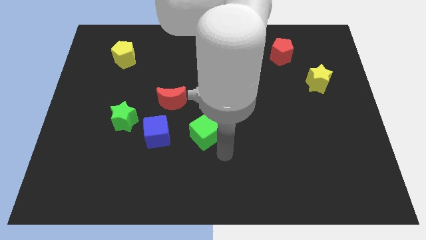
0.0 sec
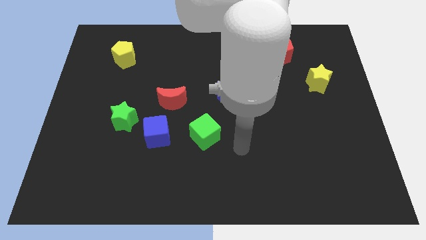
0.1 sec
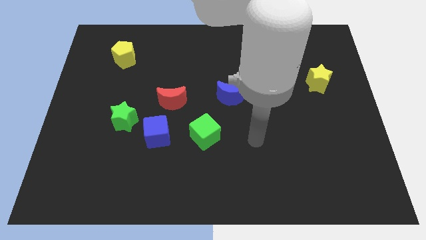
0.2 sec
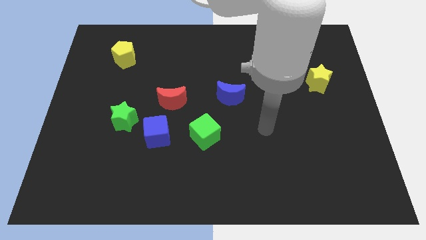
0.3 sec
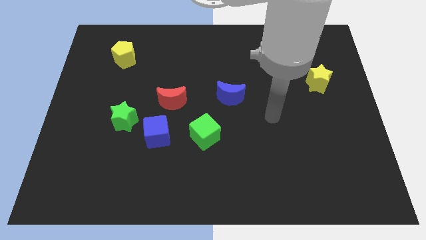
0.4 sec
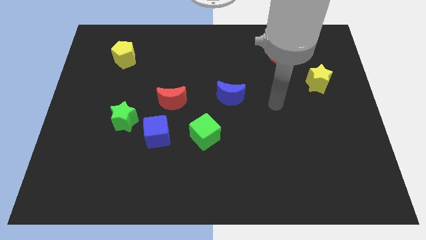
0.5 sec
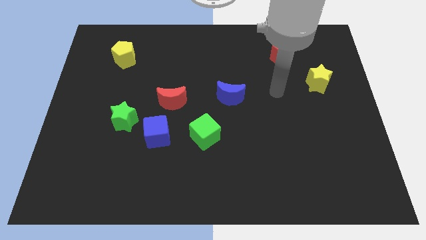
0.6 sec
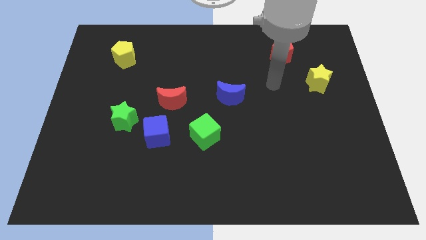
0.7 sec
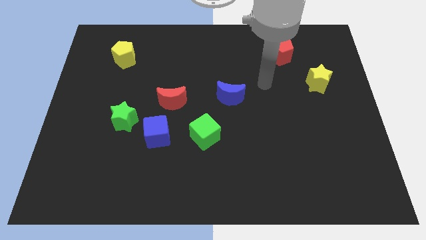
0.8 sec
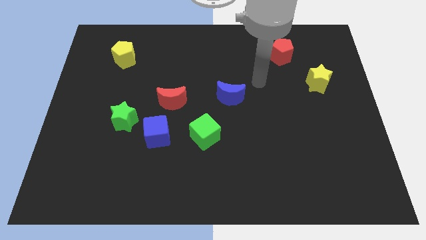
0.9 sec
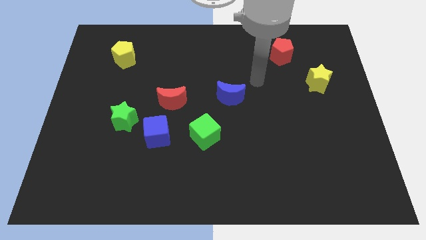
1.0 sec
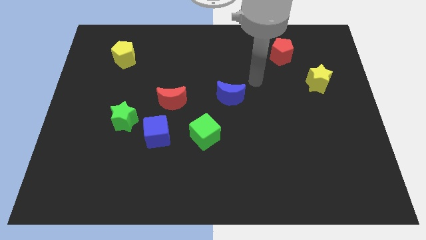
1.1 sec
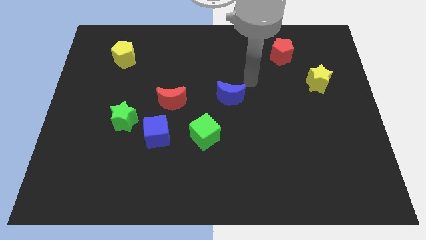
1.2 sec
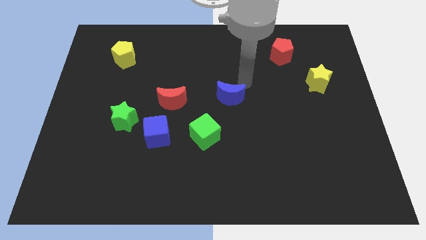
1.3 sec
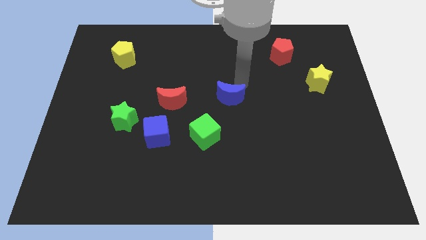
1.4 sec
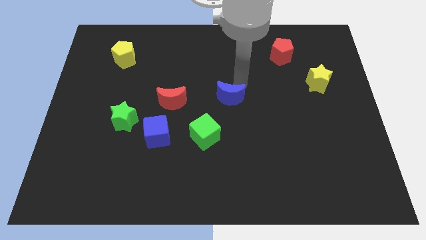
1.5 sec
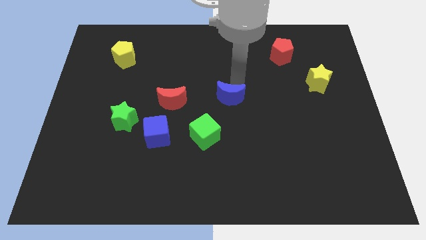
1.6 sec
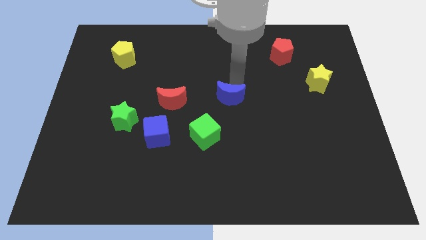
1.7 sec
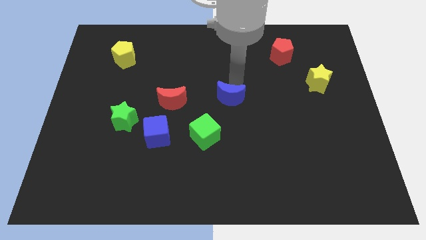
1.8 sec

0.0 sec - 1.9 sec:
move the pointer to the top of the blue moon

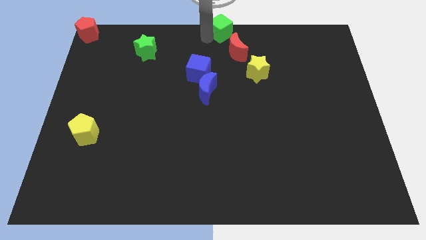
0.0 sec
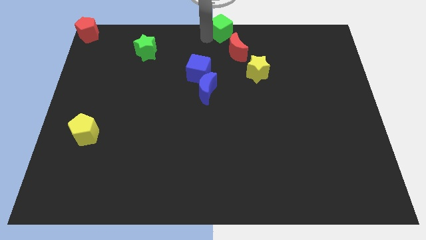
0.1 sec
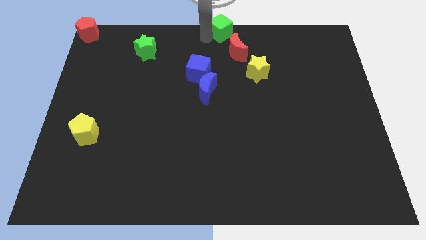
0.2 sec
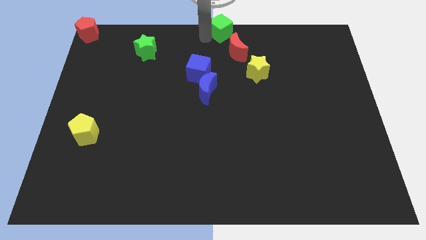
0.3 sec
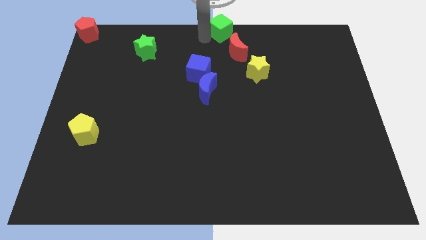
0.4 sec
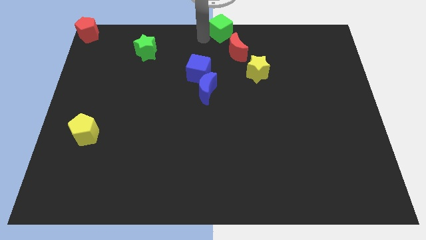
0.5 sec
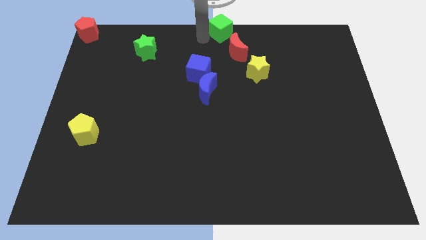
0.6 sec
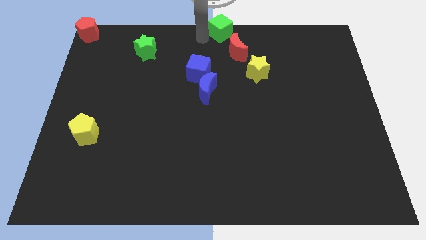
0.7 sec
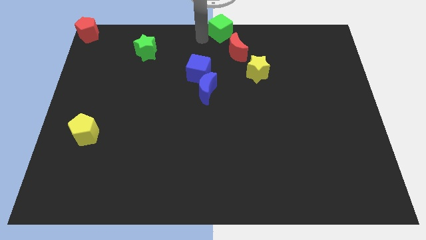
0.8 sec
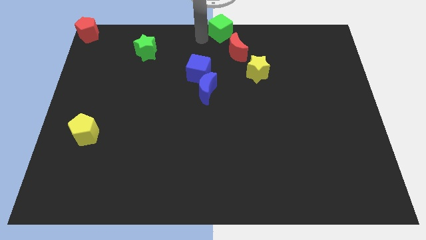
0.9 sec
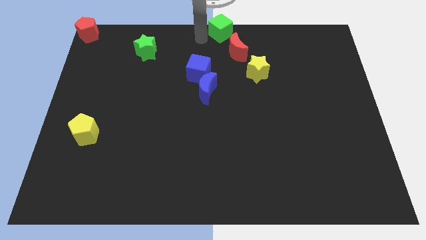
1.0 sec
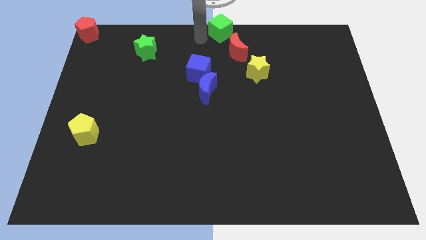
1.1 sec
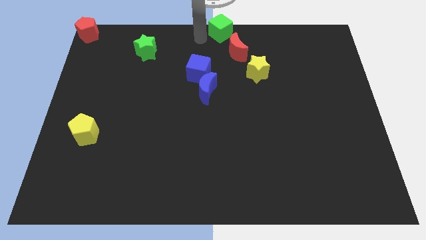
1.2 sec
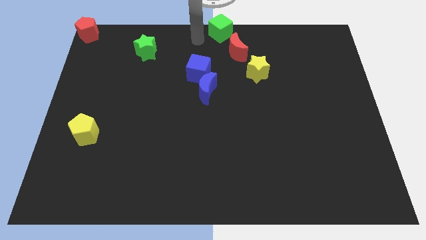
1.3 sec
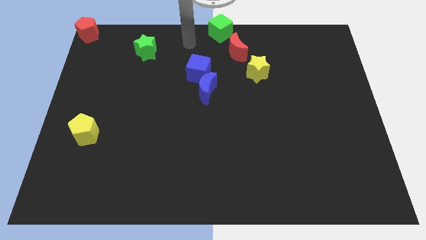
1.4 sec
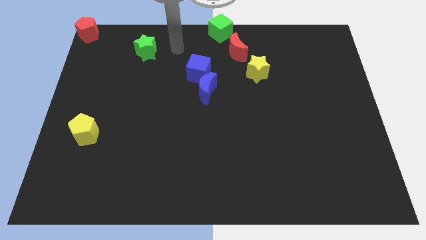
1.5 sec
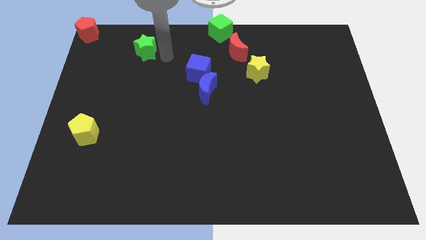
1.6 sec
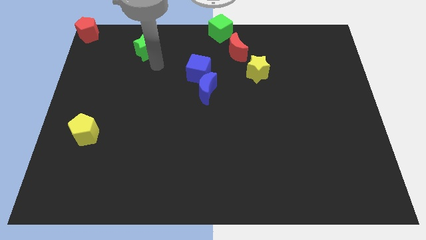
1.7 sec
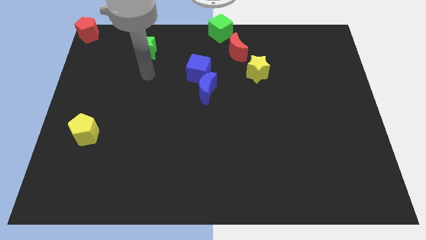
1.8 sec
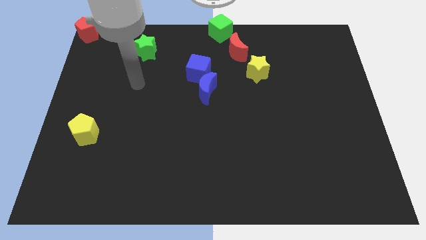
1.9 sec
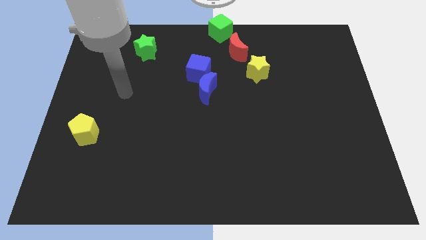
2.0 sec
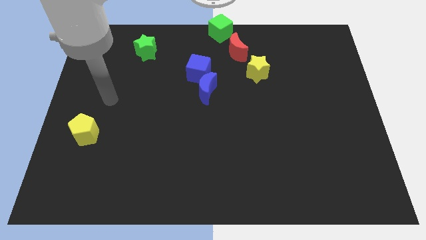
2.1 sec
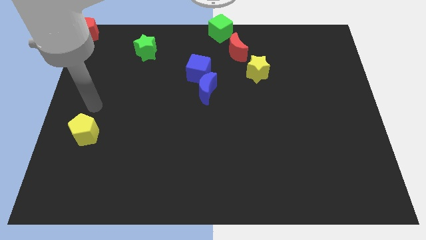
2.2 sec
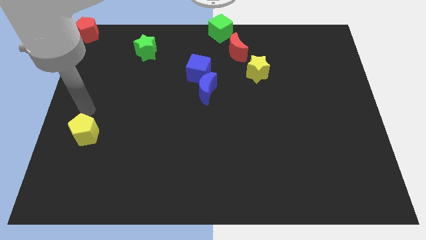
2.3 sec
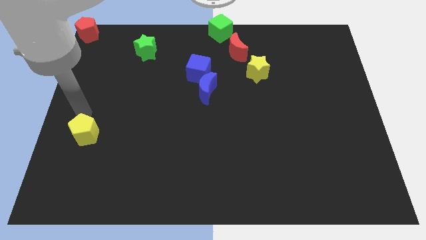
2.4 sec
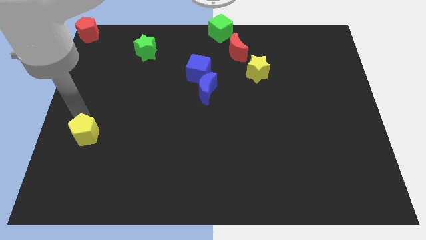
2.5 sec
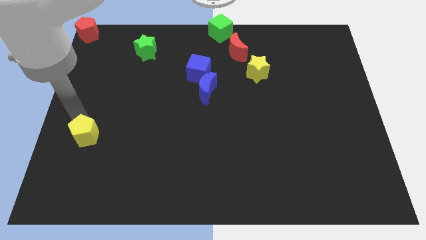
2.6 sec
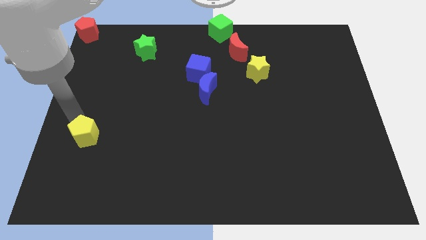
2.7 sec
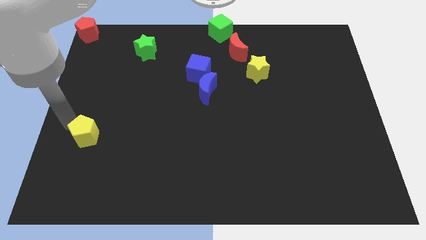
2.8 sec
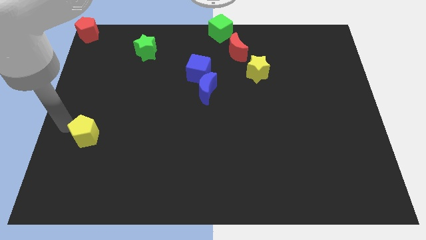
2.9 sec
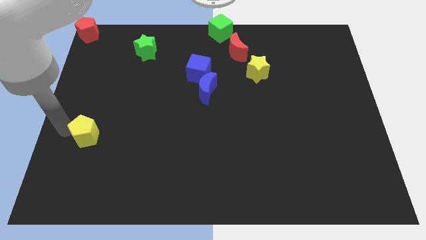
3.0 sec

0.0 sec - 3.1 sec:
tap your arm to the left side of yellow pentagon

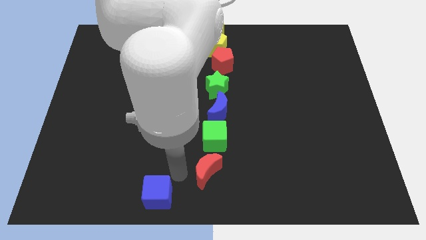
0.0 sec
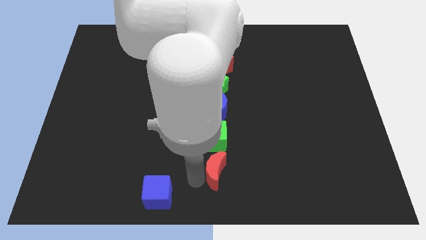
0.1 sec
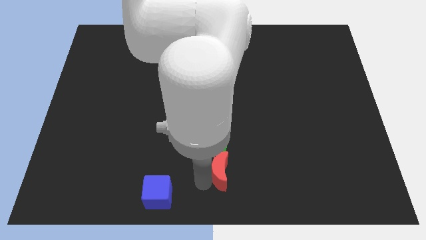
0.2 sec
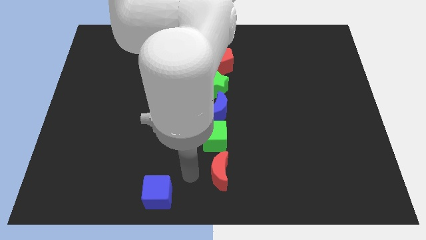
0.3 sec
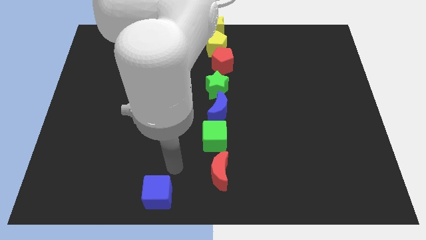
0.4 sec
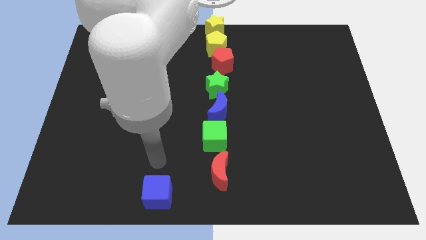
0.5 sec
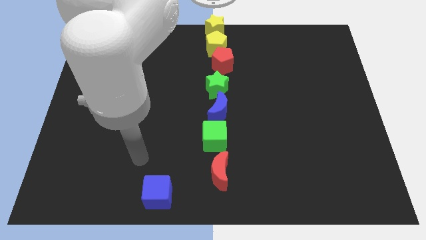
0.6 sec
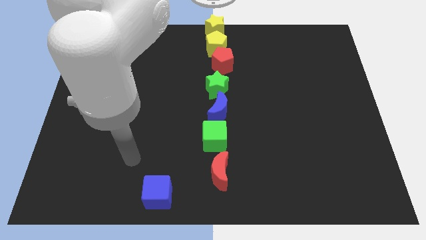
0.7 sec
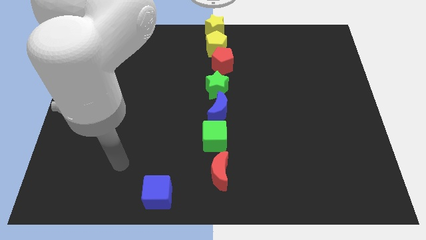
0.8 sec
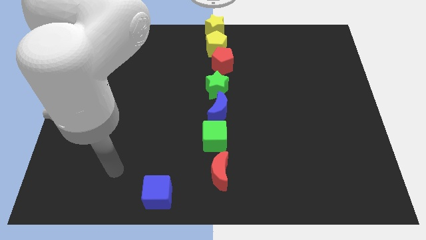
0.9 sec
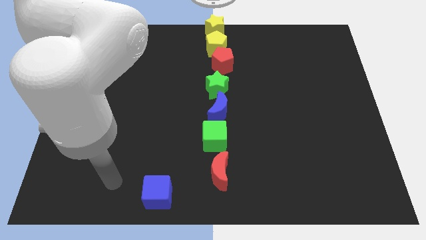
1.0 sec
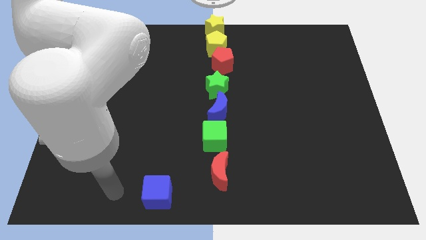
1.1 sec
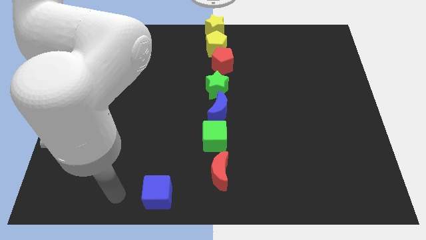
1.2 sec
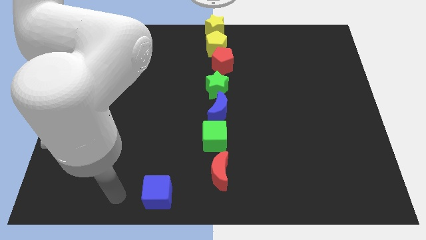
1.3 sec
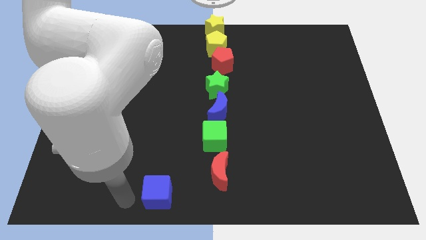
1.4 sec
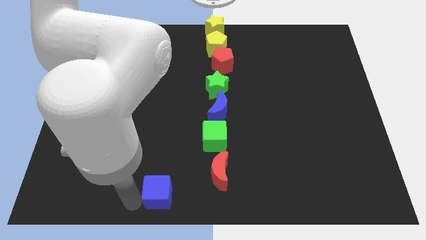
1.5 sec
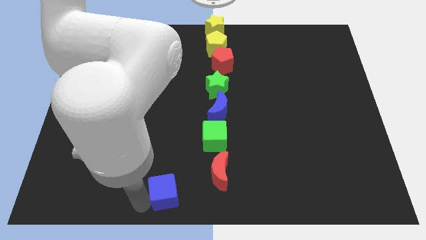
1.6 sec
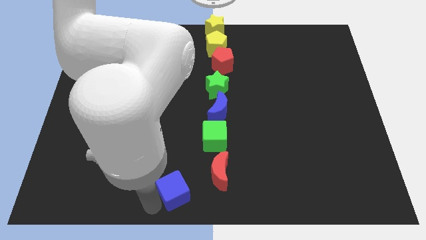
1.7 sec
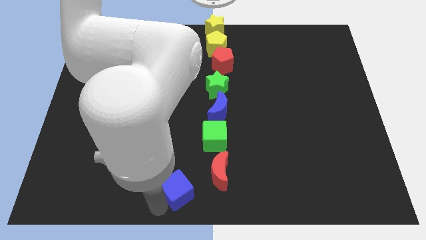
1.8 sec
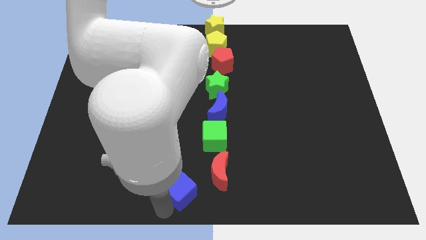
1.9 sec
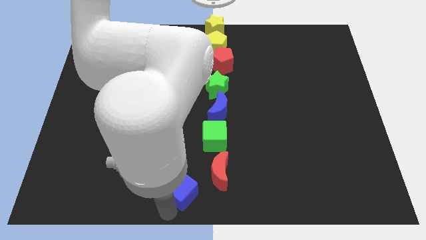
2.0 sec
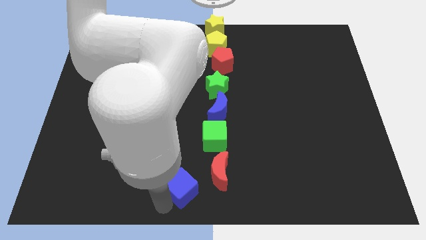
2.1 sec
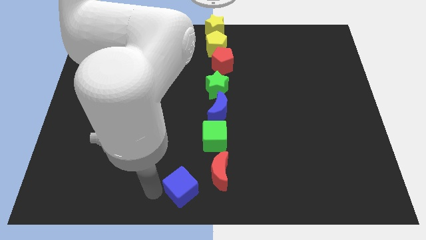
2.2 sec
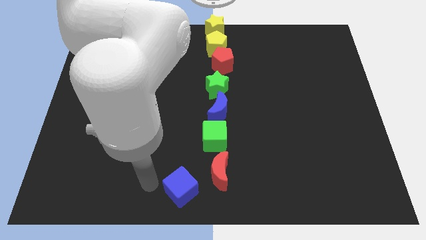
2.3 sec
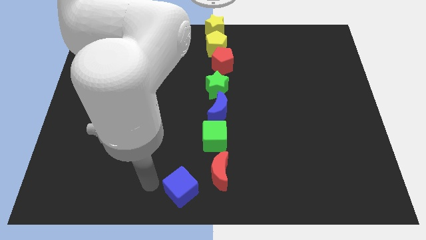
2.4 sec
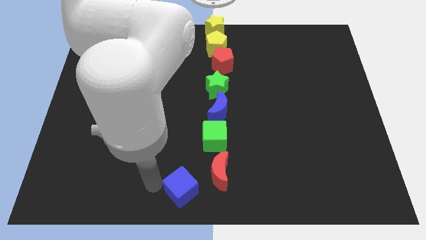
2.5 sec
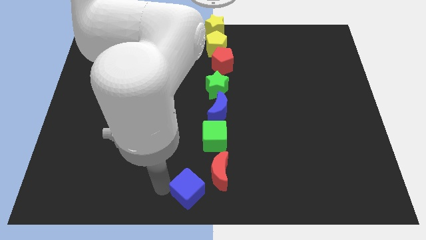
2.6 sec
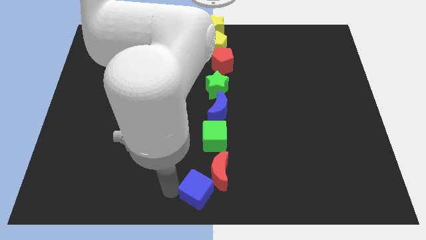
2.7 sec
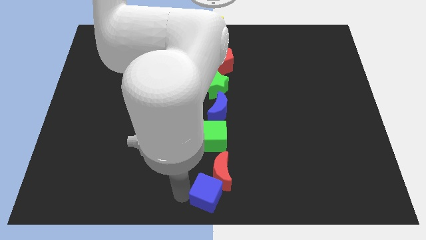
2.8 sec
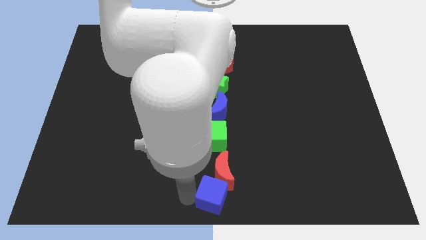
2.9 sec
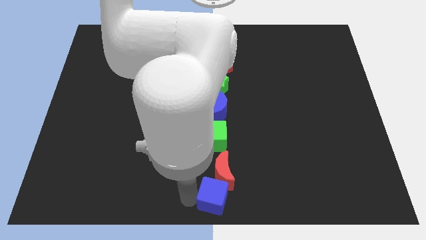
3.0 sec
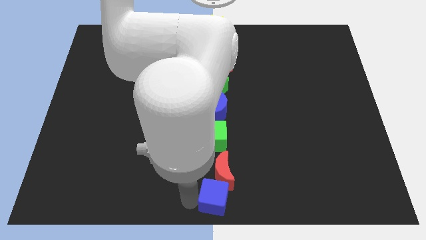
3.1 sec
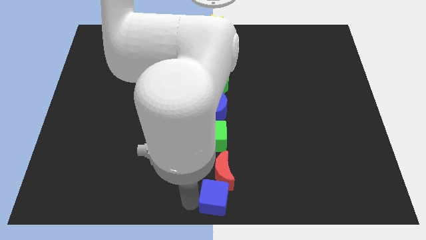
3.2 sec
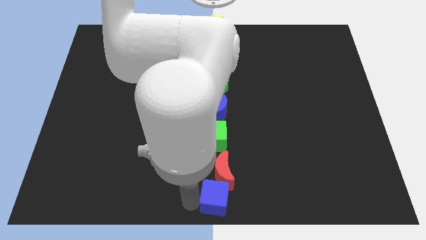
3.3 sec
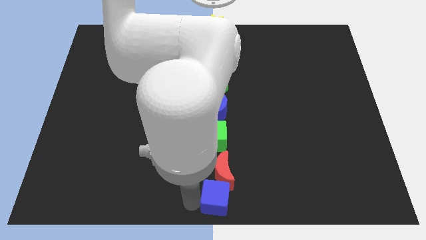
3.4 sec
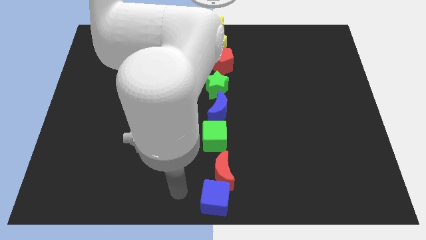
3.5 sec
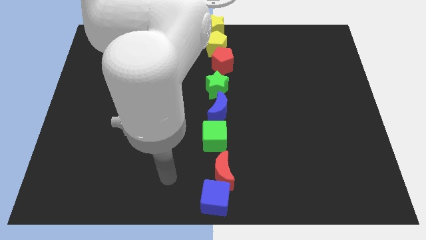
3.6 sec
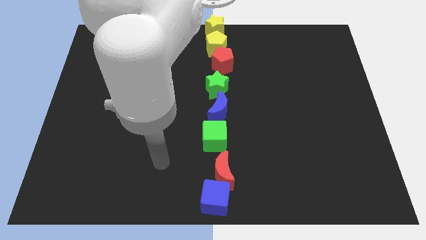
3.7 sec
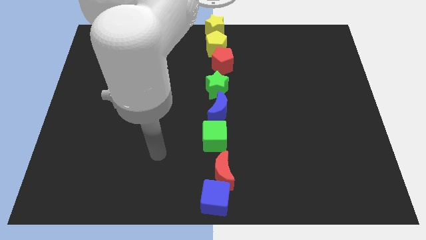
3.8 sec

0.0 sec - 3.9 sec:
place blue cube below red crescent
